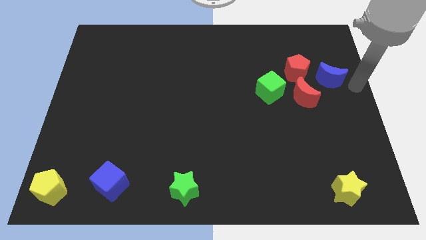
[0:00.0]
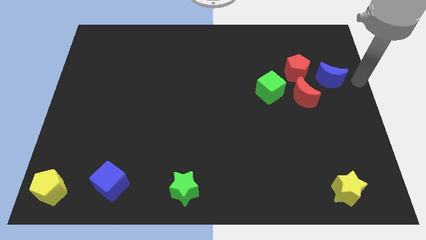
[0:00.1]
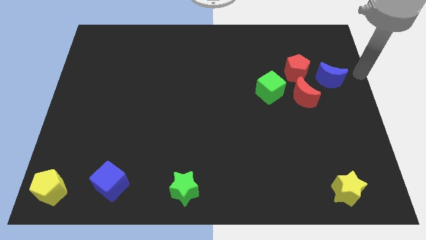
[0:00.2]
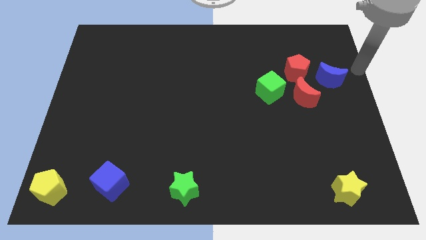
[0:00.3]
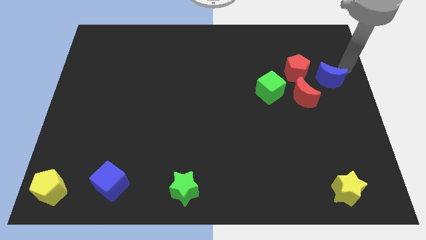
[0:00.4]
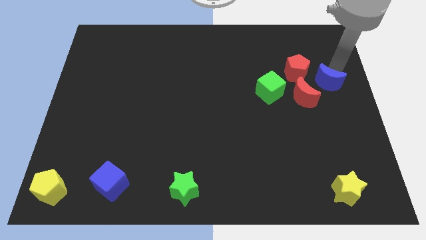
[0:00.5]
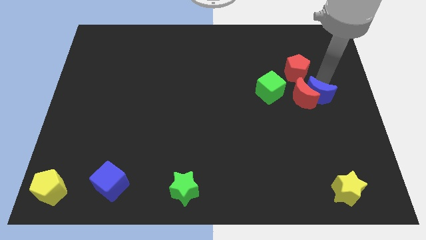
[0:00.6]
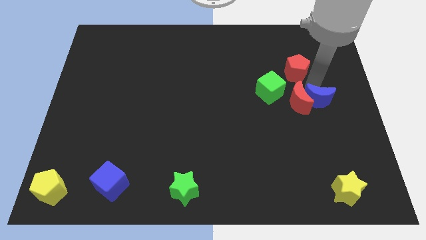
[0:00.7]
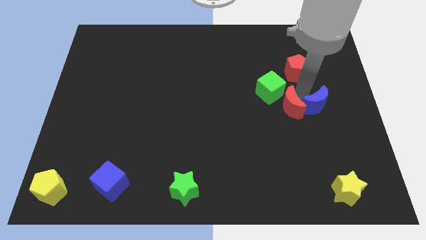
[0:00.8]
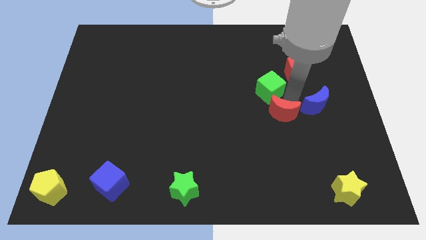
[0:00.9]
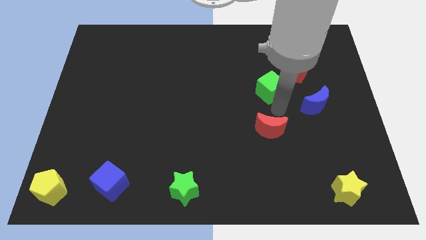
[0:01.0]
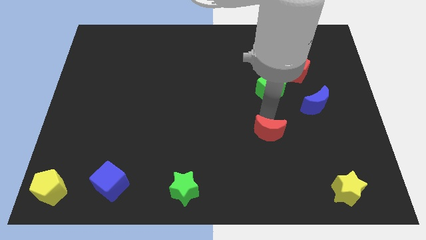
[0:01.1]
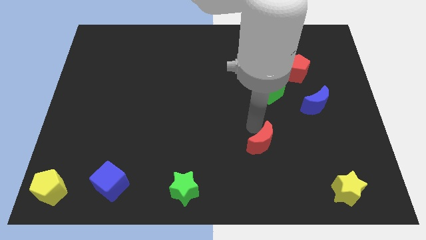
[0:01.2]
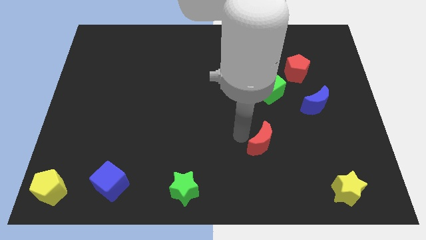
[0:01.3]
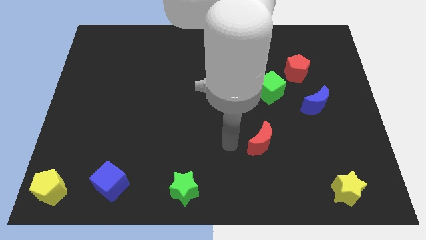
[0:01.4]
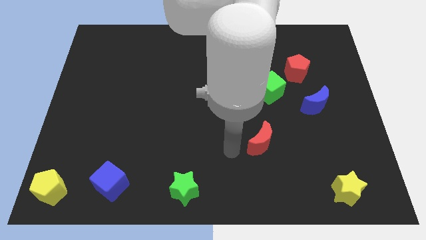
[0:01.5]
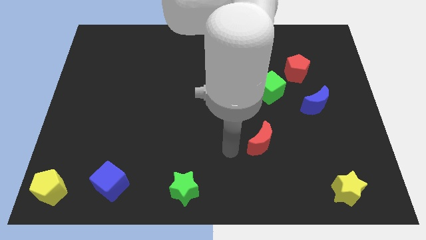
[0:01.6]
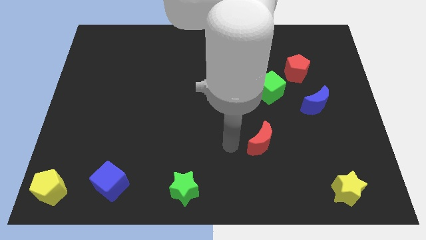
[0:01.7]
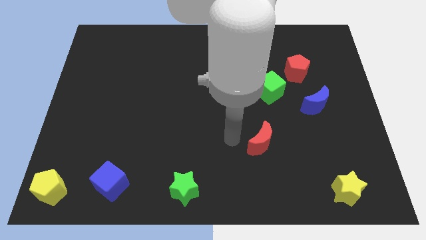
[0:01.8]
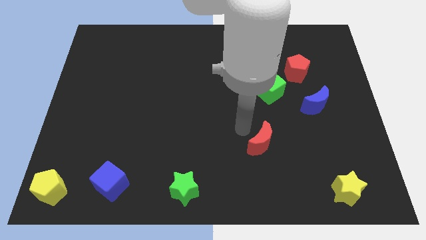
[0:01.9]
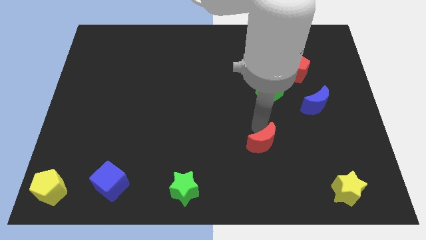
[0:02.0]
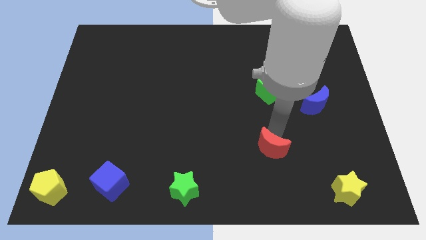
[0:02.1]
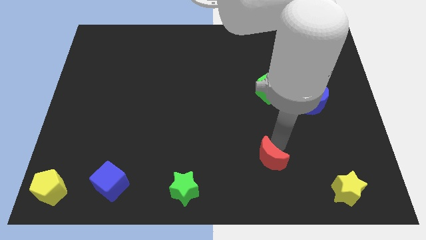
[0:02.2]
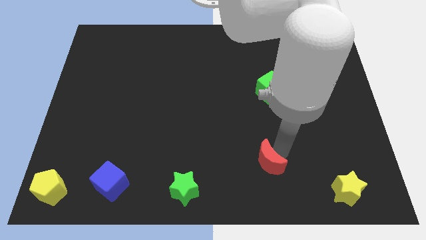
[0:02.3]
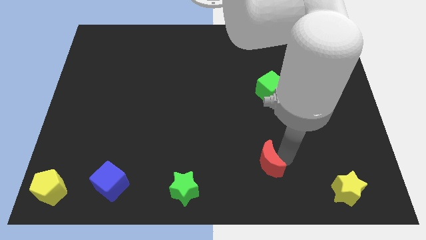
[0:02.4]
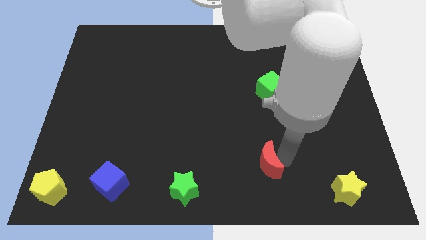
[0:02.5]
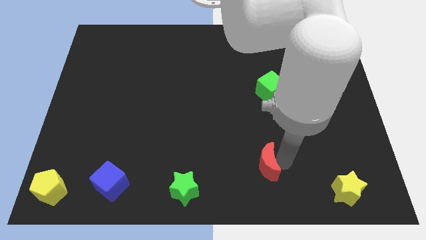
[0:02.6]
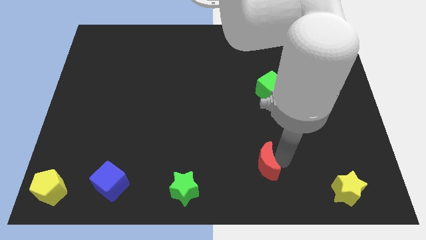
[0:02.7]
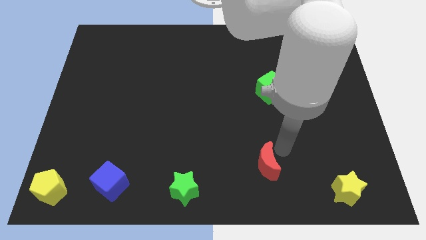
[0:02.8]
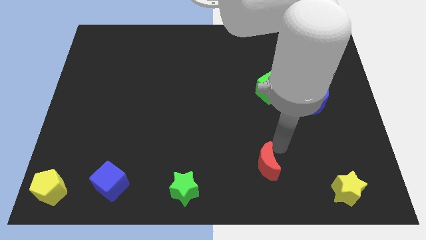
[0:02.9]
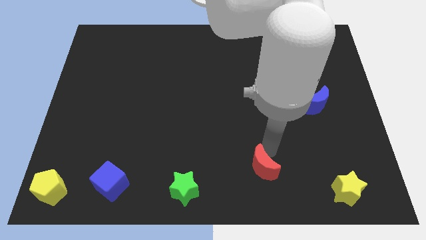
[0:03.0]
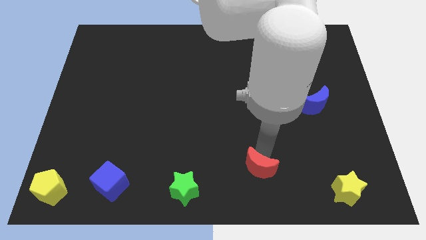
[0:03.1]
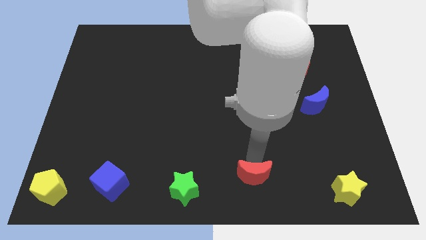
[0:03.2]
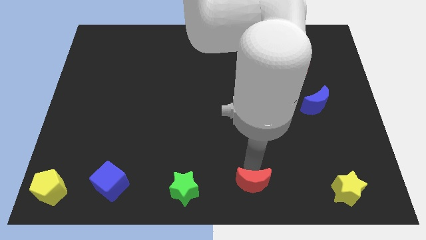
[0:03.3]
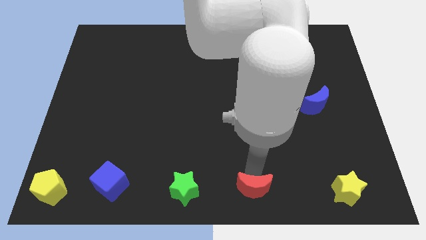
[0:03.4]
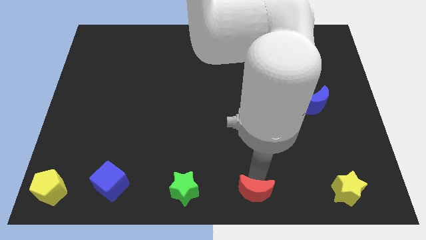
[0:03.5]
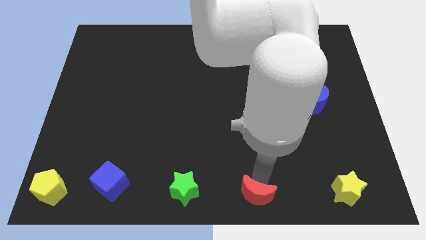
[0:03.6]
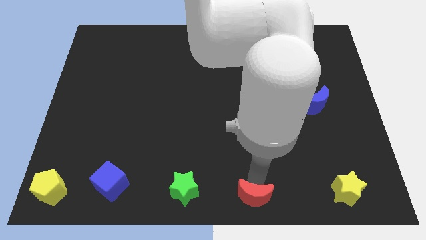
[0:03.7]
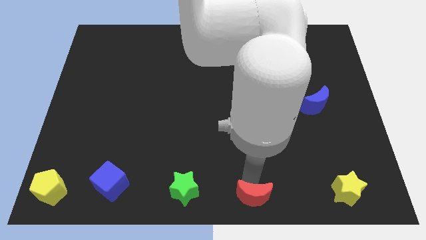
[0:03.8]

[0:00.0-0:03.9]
make a horizontal line with the red crescent and other four blocks at the bottom side of the table

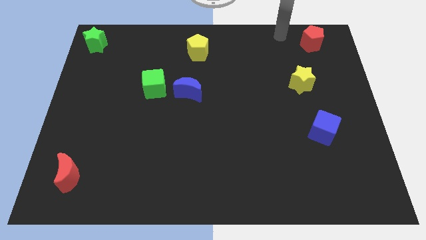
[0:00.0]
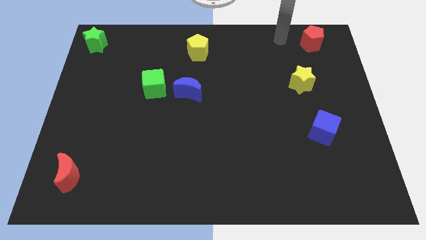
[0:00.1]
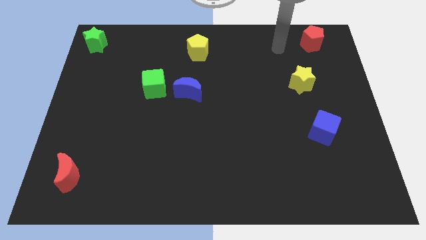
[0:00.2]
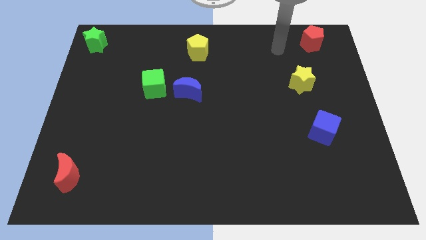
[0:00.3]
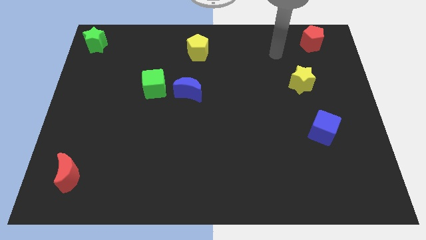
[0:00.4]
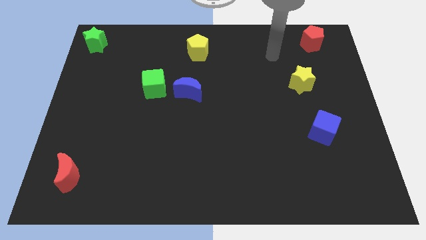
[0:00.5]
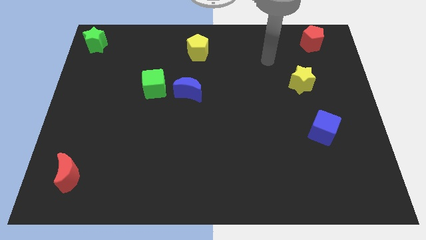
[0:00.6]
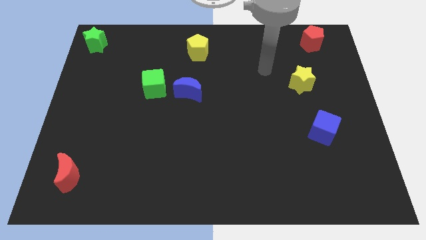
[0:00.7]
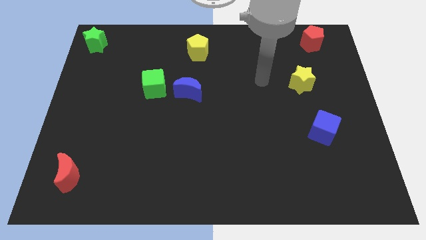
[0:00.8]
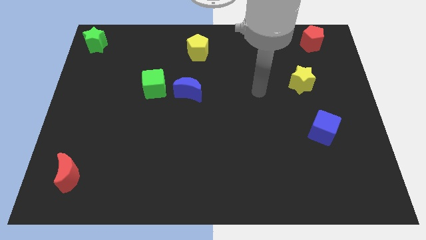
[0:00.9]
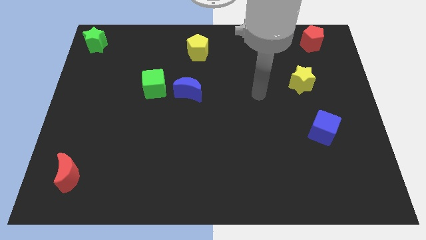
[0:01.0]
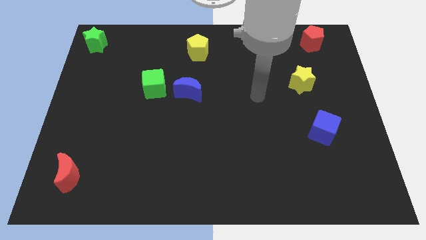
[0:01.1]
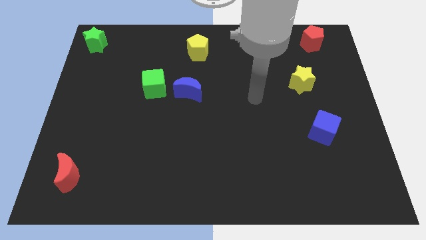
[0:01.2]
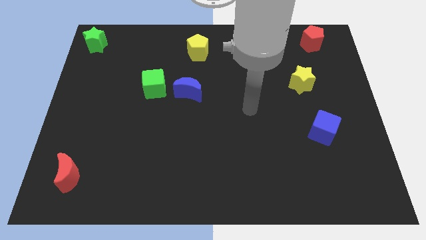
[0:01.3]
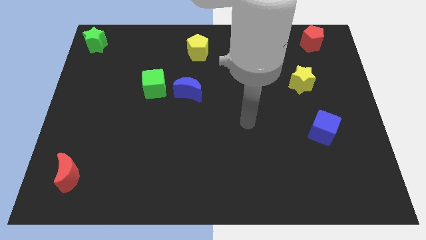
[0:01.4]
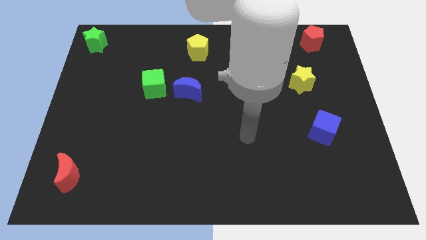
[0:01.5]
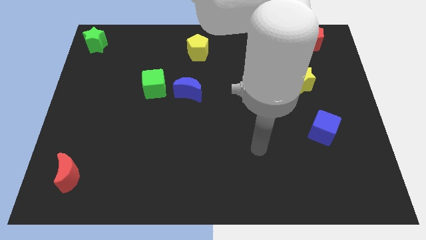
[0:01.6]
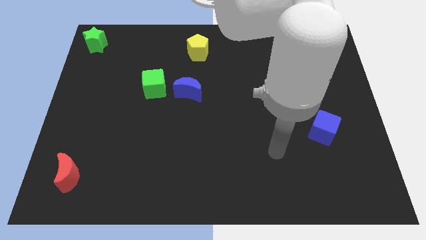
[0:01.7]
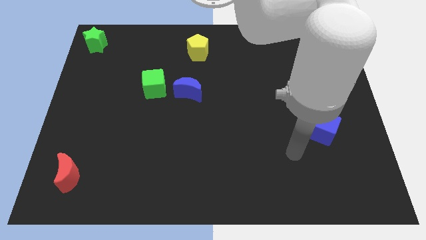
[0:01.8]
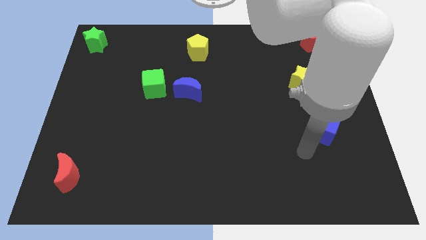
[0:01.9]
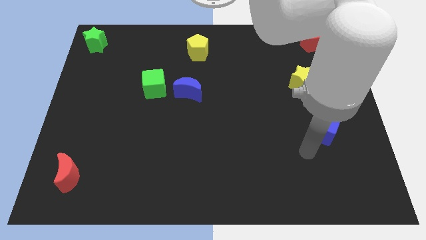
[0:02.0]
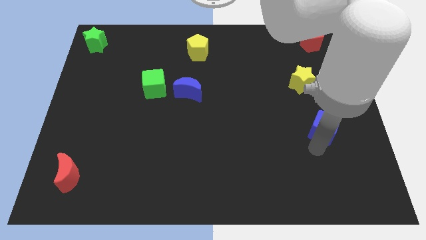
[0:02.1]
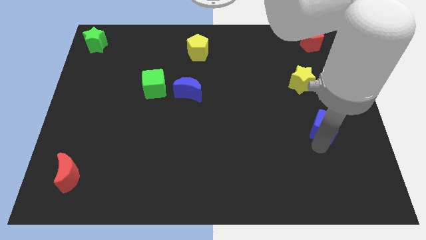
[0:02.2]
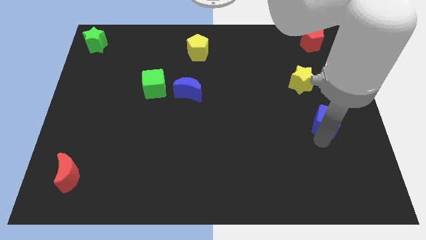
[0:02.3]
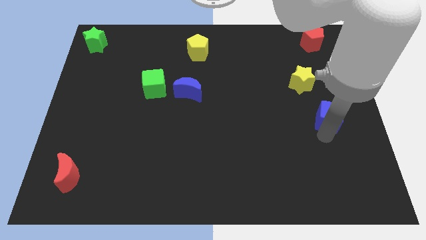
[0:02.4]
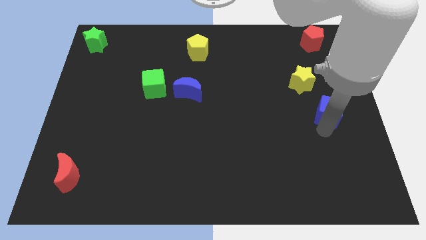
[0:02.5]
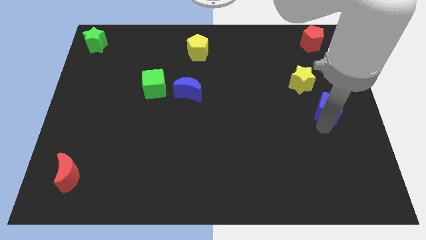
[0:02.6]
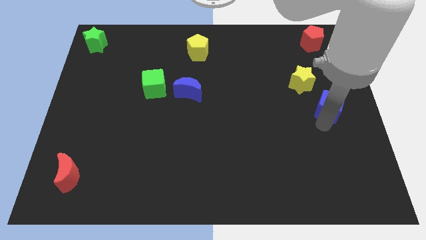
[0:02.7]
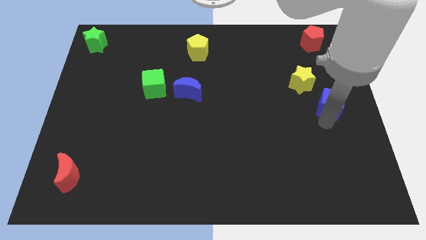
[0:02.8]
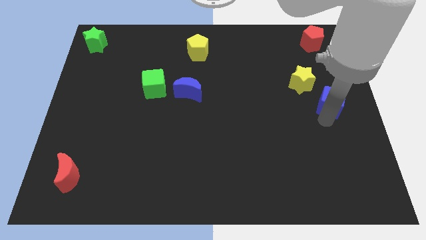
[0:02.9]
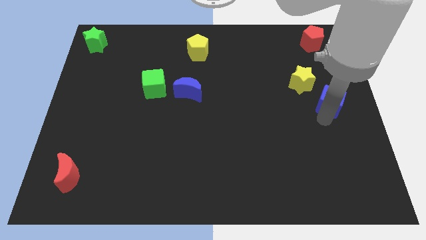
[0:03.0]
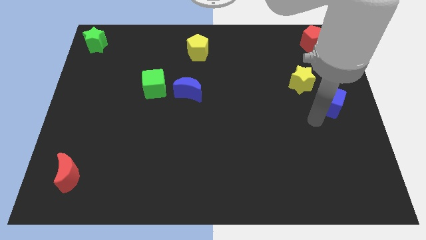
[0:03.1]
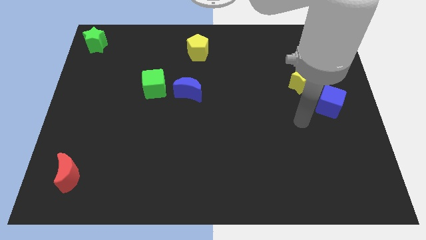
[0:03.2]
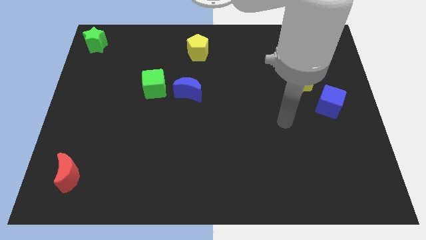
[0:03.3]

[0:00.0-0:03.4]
move the blue cube towards the right center of the board

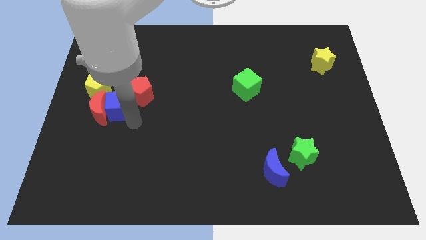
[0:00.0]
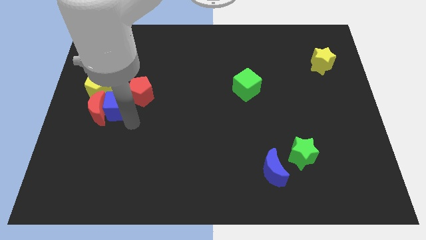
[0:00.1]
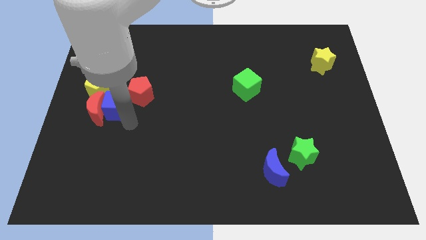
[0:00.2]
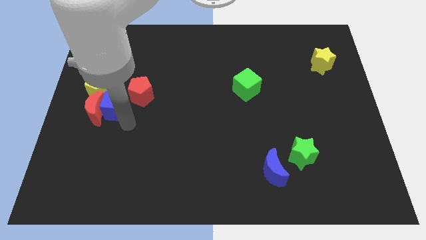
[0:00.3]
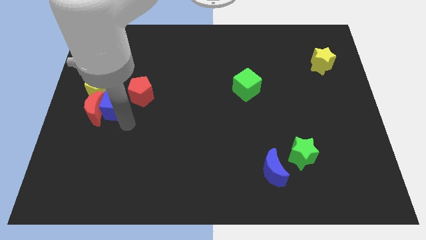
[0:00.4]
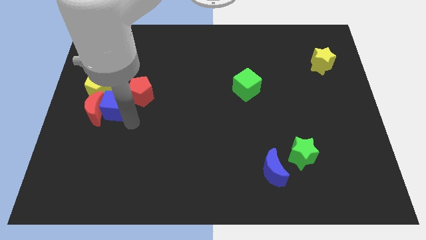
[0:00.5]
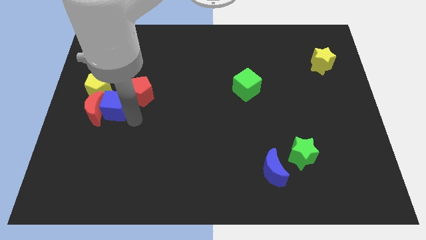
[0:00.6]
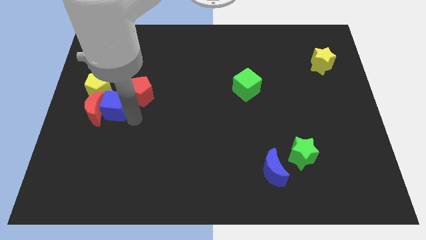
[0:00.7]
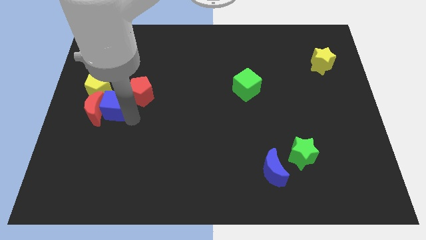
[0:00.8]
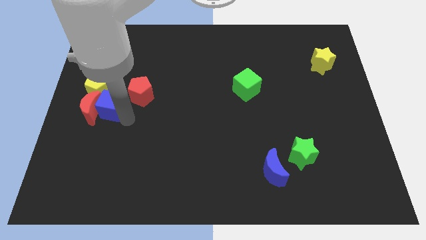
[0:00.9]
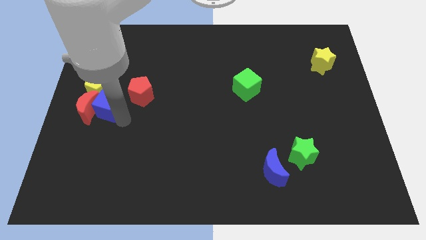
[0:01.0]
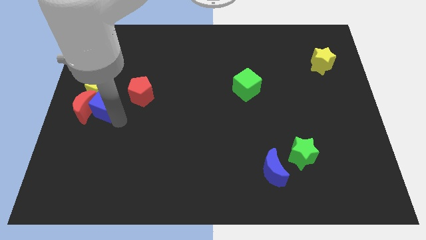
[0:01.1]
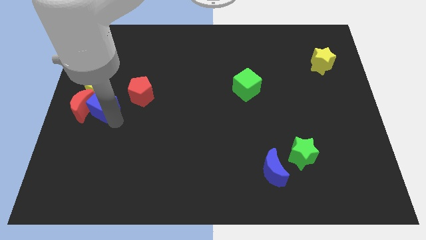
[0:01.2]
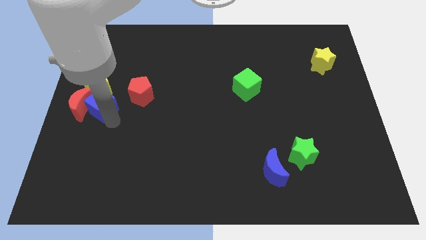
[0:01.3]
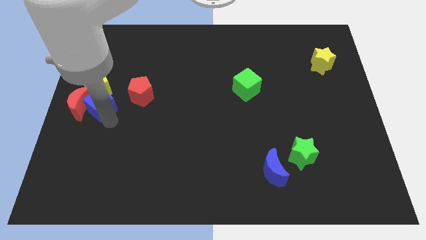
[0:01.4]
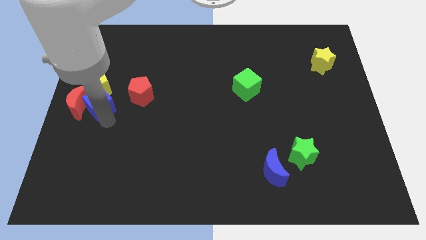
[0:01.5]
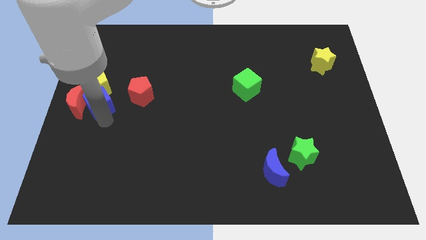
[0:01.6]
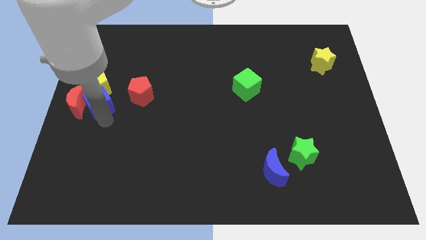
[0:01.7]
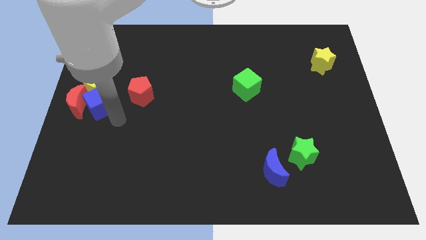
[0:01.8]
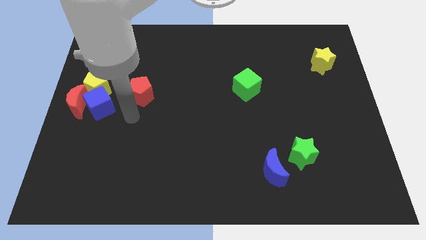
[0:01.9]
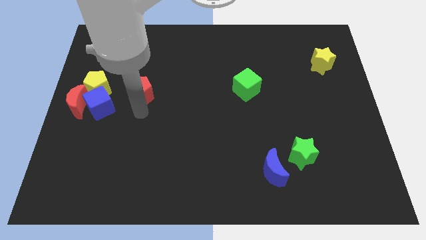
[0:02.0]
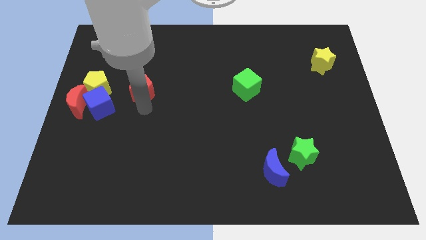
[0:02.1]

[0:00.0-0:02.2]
place the blue cube at the bottom of the yellow pentagon
